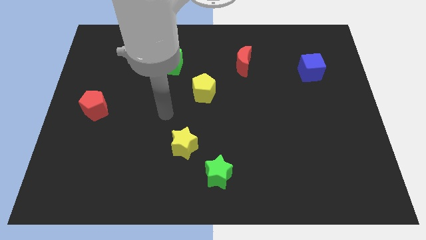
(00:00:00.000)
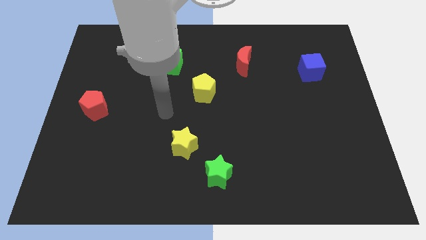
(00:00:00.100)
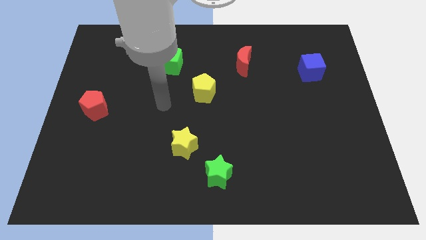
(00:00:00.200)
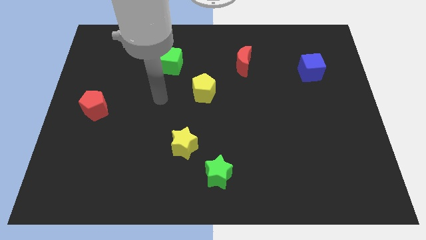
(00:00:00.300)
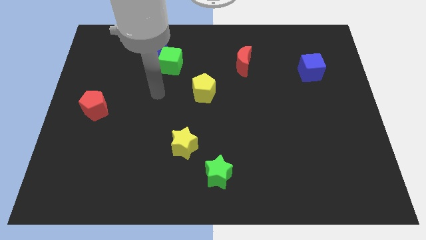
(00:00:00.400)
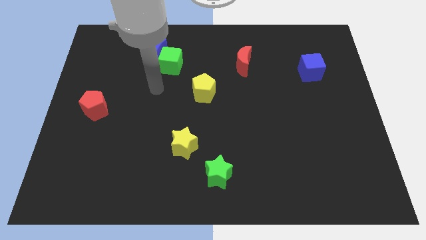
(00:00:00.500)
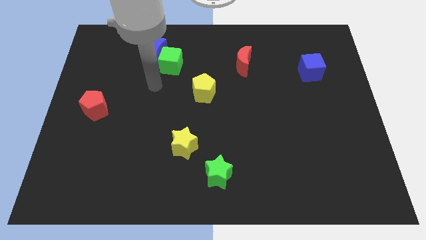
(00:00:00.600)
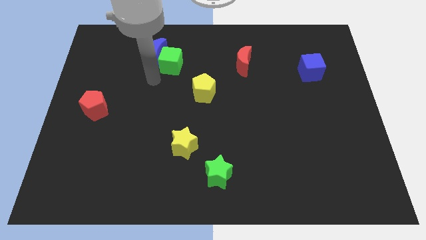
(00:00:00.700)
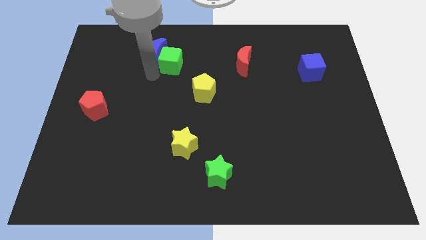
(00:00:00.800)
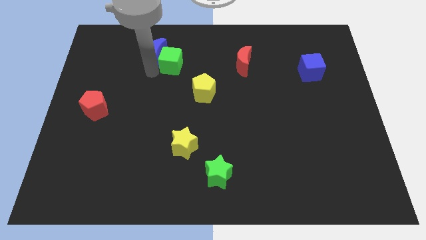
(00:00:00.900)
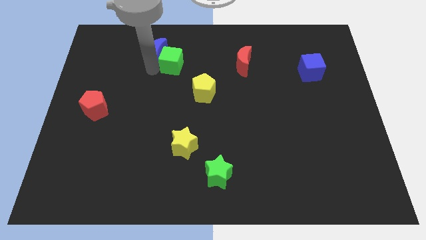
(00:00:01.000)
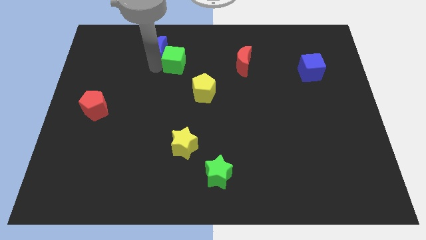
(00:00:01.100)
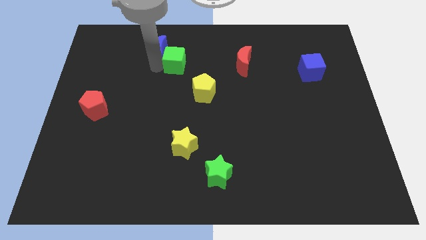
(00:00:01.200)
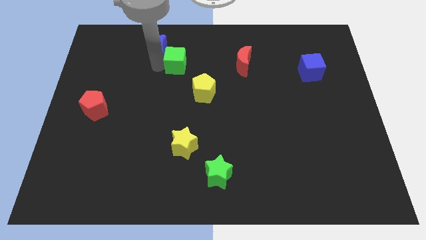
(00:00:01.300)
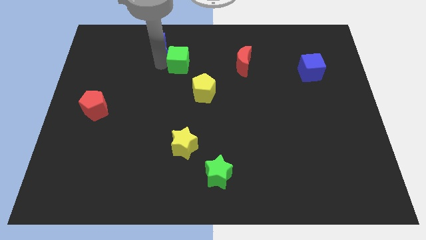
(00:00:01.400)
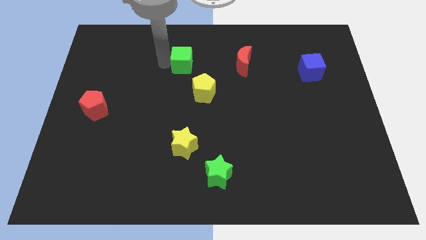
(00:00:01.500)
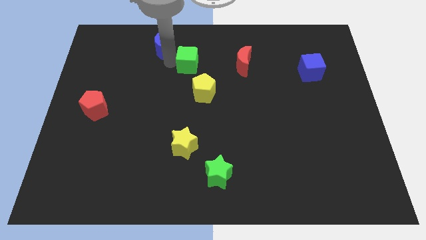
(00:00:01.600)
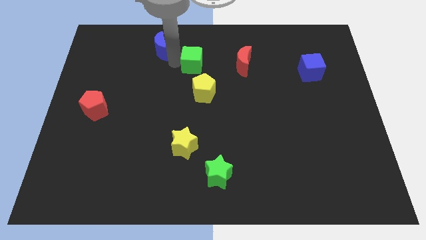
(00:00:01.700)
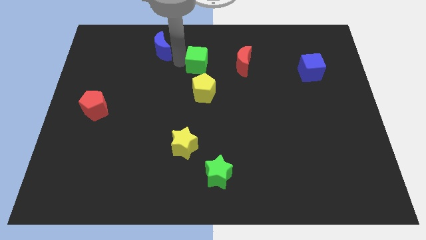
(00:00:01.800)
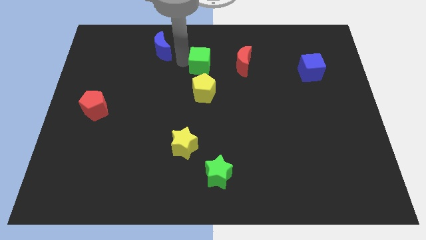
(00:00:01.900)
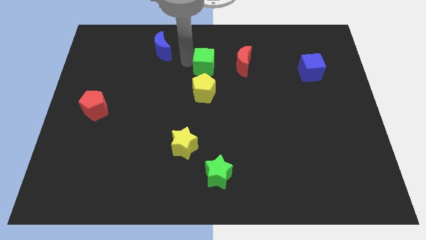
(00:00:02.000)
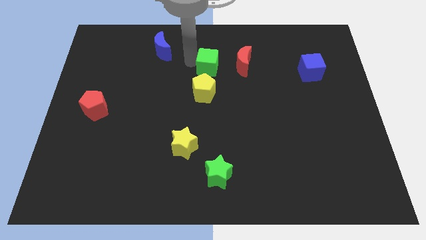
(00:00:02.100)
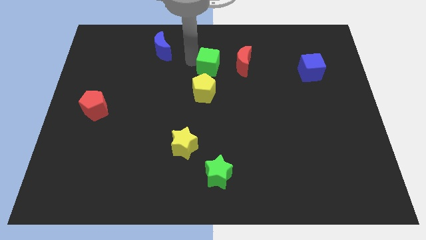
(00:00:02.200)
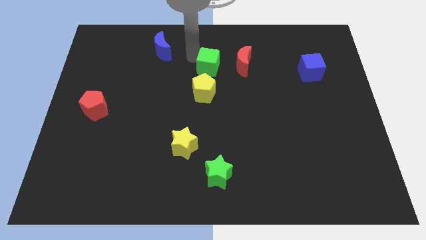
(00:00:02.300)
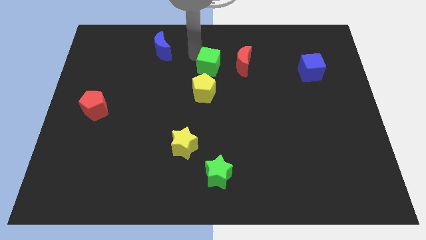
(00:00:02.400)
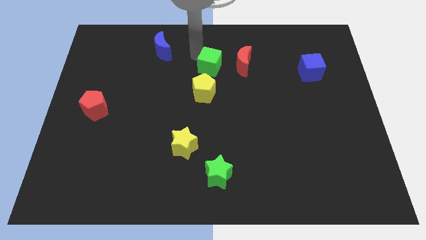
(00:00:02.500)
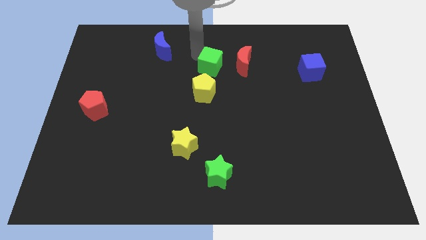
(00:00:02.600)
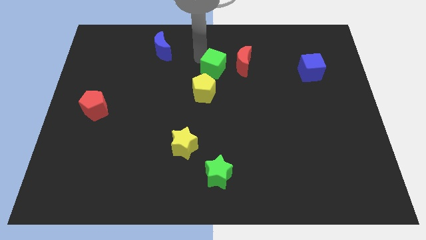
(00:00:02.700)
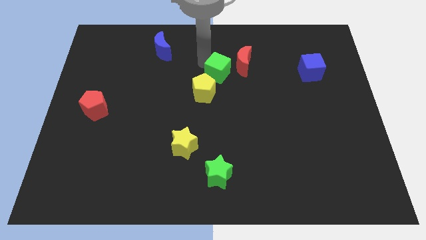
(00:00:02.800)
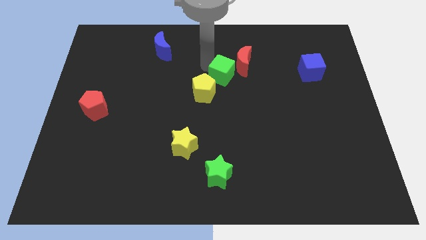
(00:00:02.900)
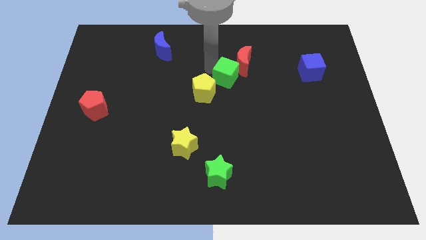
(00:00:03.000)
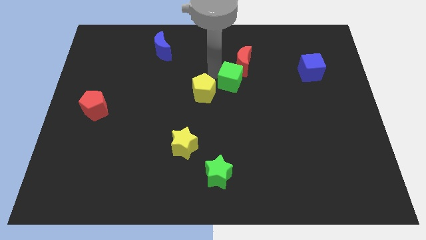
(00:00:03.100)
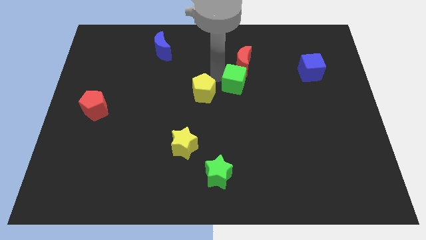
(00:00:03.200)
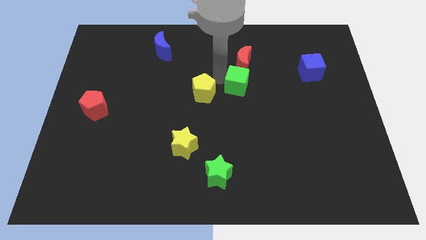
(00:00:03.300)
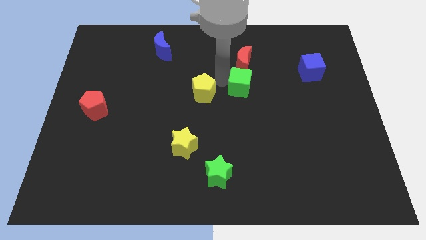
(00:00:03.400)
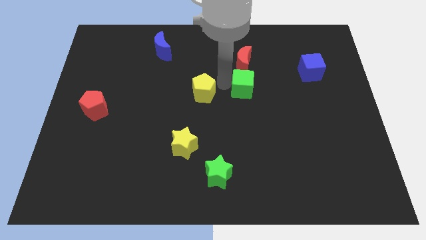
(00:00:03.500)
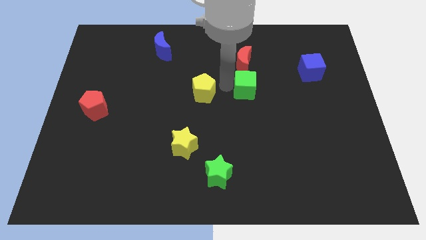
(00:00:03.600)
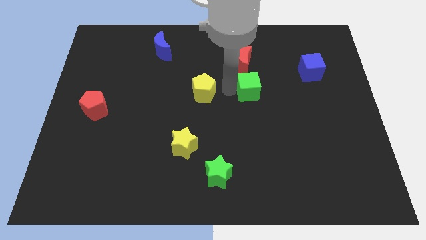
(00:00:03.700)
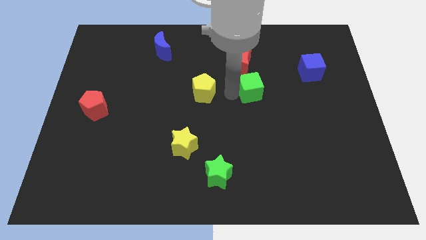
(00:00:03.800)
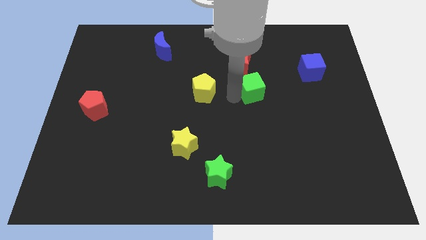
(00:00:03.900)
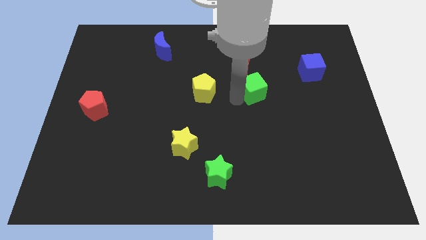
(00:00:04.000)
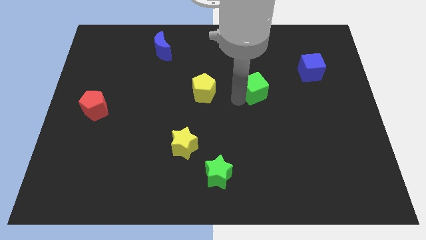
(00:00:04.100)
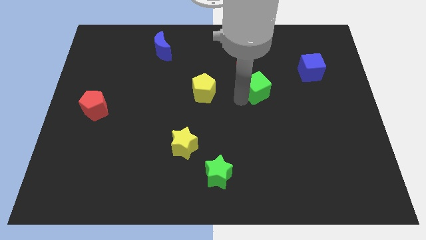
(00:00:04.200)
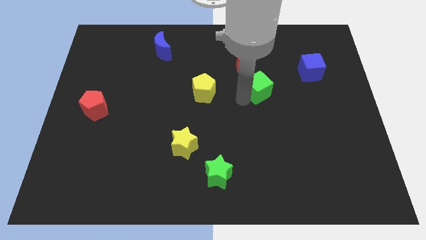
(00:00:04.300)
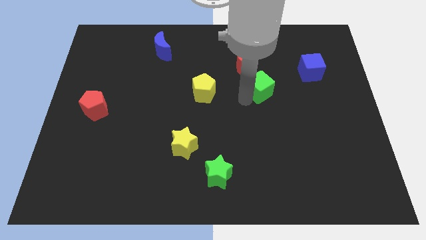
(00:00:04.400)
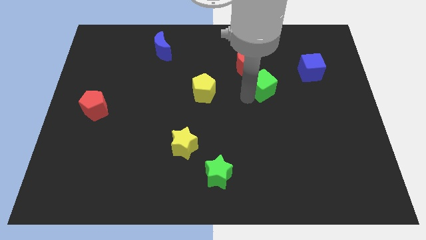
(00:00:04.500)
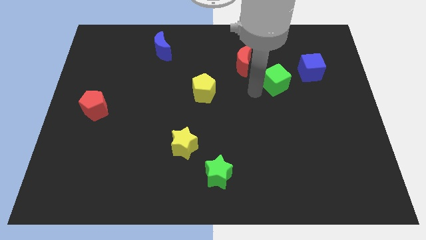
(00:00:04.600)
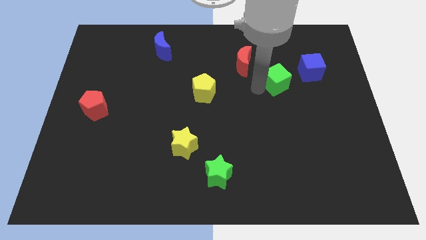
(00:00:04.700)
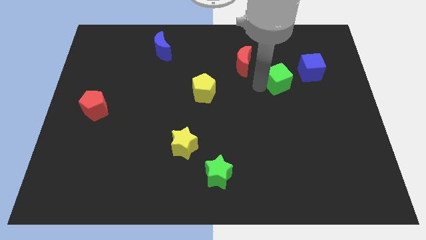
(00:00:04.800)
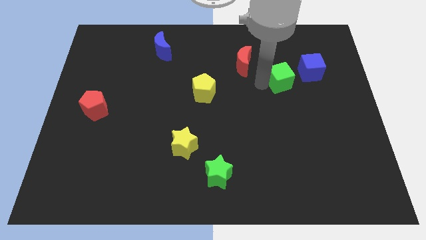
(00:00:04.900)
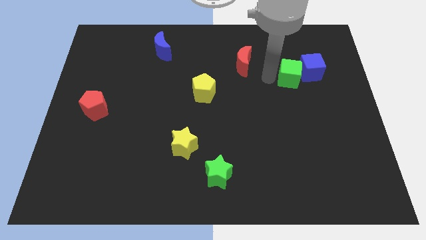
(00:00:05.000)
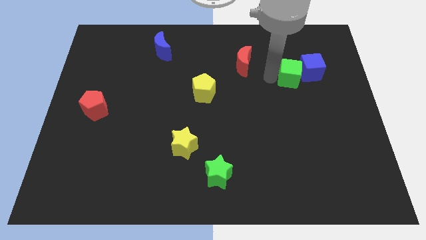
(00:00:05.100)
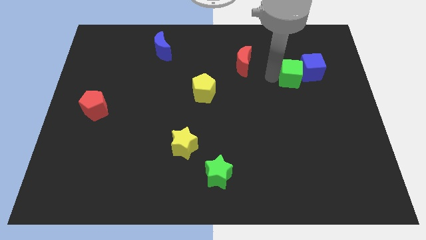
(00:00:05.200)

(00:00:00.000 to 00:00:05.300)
put the green cube next to the blue cube

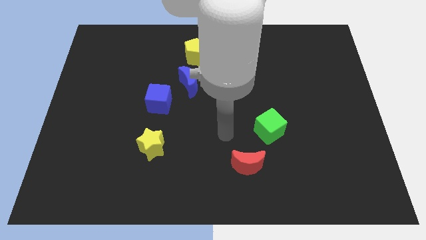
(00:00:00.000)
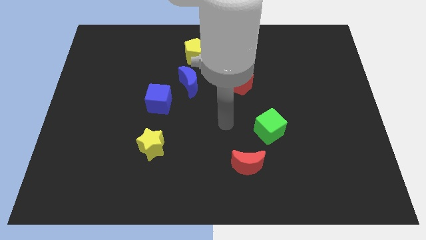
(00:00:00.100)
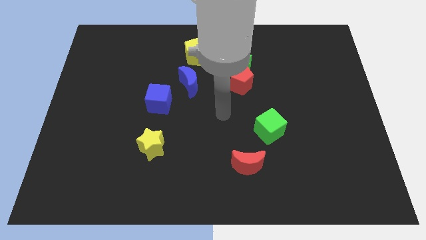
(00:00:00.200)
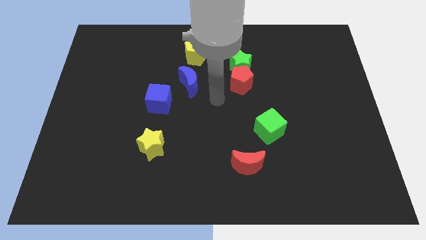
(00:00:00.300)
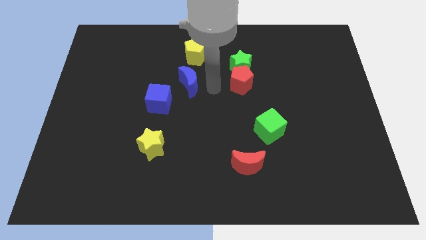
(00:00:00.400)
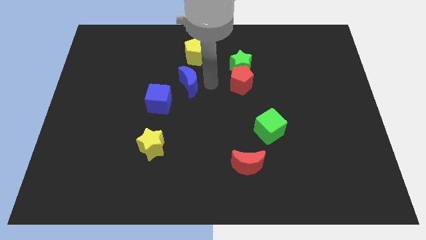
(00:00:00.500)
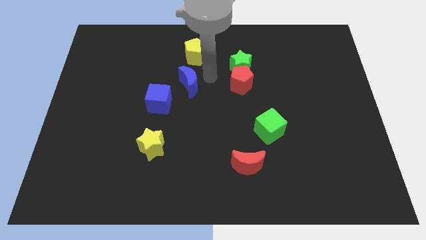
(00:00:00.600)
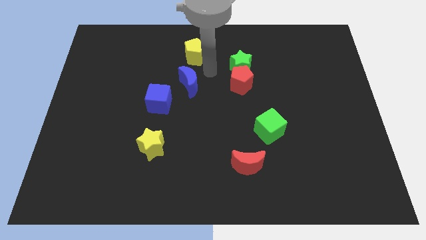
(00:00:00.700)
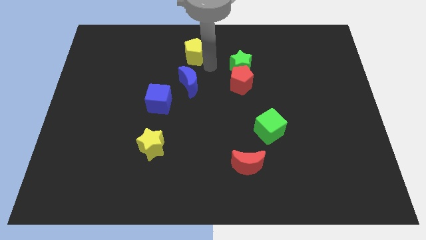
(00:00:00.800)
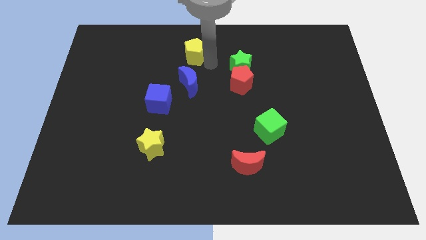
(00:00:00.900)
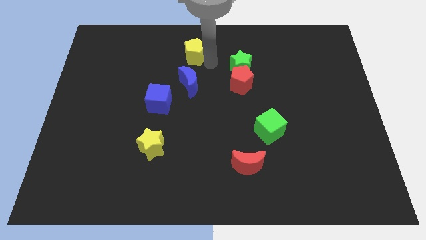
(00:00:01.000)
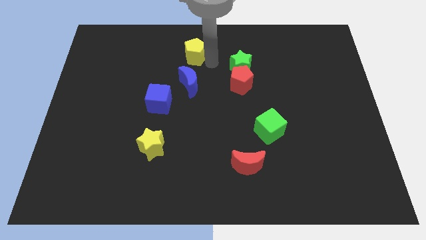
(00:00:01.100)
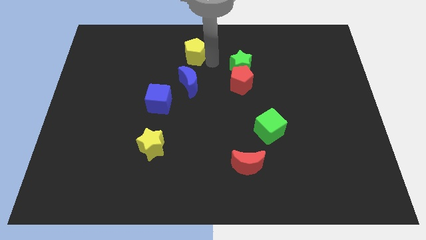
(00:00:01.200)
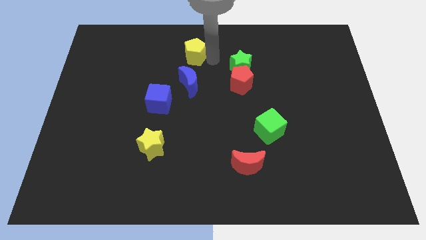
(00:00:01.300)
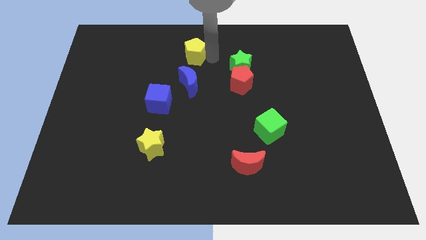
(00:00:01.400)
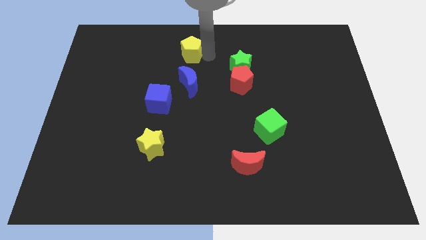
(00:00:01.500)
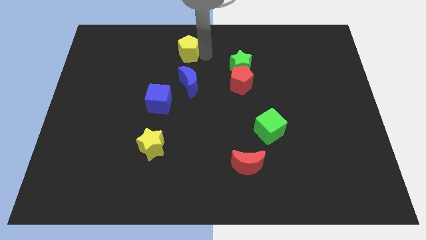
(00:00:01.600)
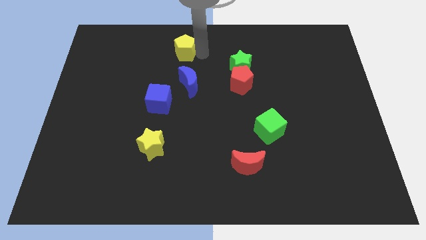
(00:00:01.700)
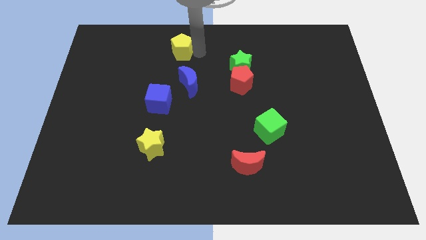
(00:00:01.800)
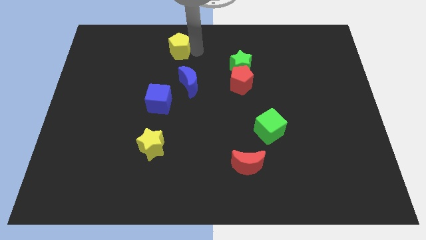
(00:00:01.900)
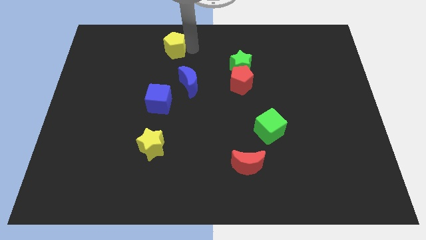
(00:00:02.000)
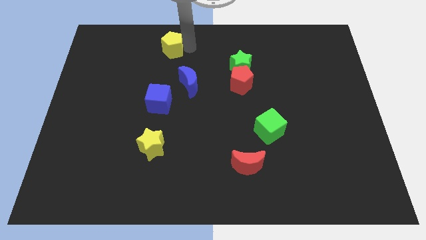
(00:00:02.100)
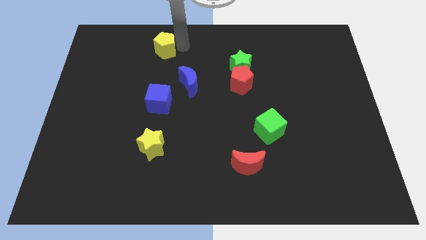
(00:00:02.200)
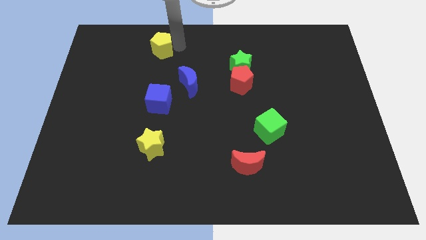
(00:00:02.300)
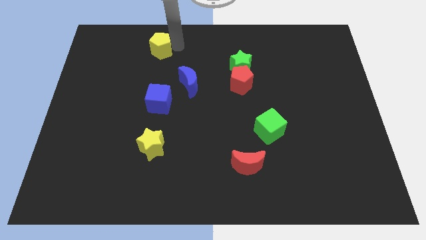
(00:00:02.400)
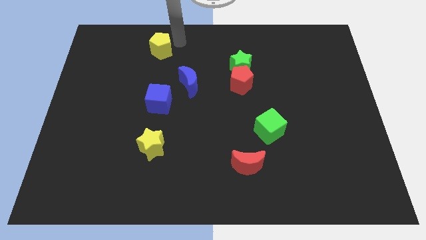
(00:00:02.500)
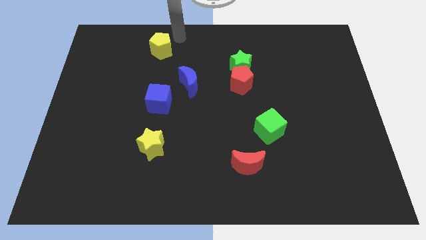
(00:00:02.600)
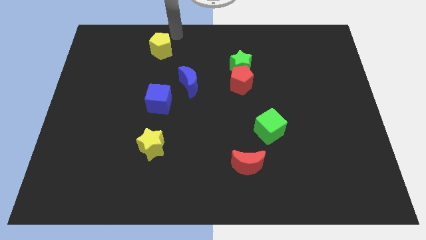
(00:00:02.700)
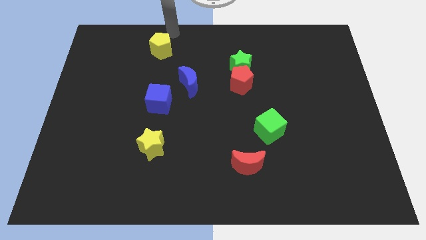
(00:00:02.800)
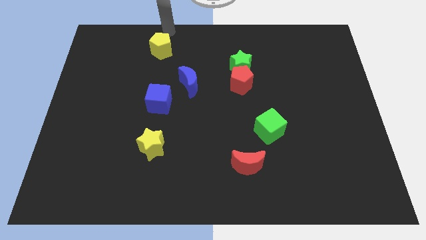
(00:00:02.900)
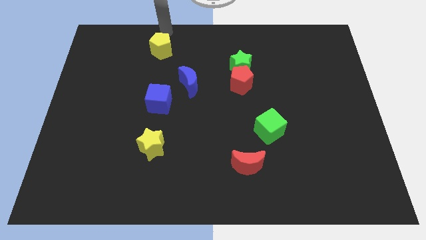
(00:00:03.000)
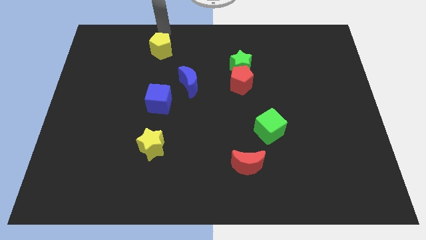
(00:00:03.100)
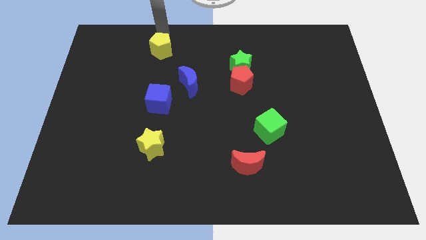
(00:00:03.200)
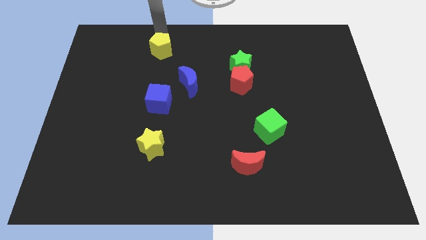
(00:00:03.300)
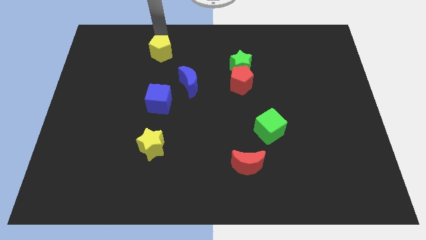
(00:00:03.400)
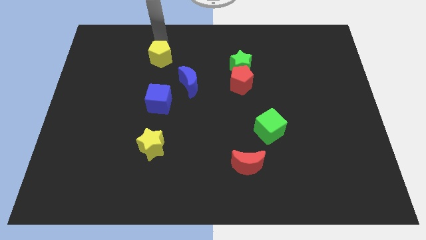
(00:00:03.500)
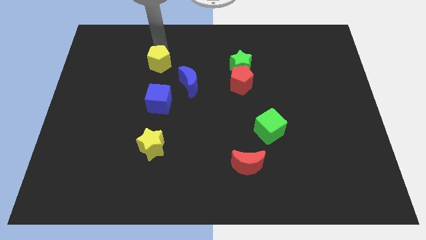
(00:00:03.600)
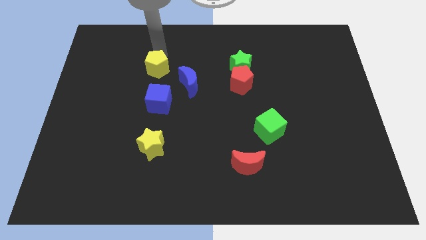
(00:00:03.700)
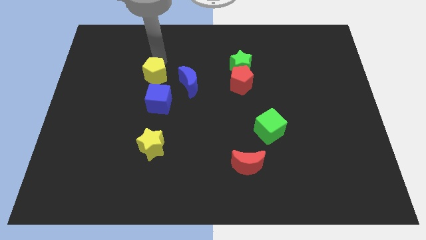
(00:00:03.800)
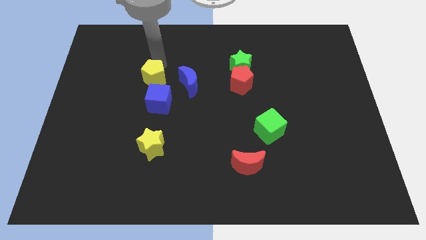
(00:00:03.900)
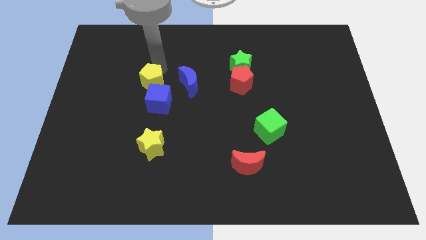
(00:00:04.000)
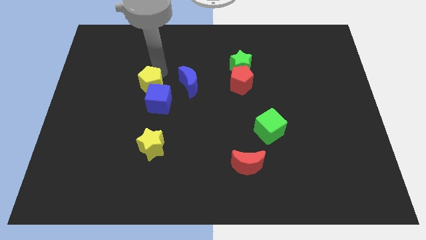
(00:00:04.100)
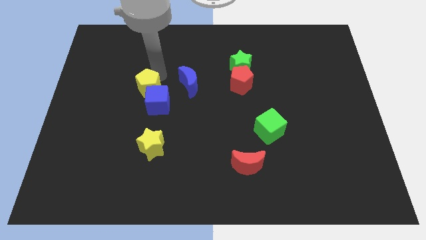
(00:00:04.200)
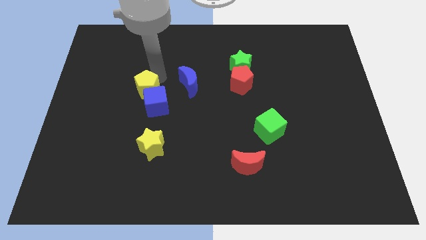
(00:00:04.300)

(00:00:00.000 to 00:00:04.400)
move the yellow pentagon towards the blue cube
